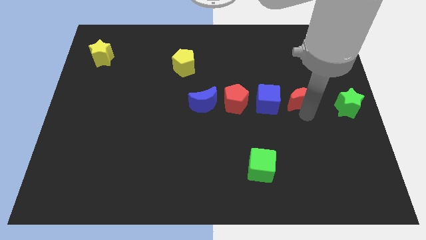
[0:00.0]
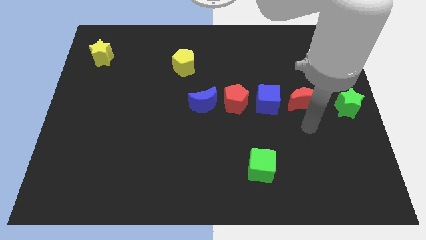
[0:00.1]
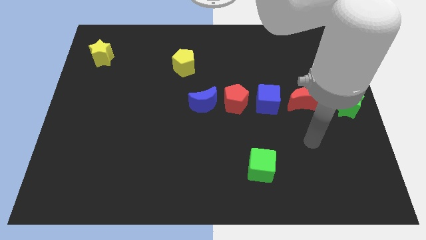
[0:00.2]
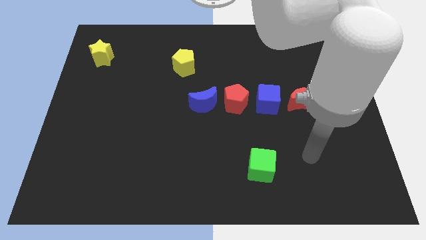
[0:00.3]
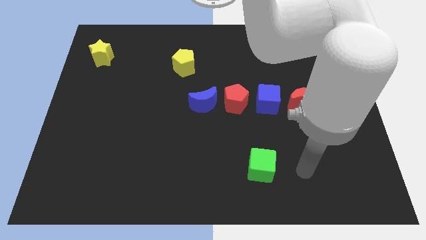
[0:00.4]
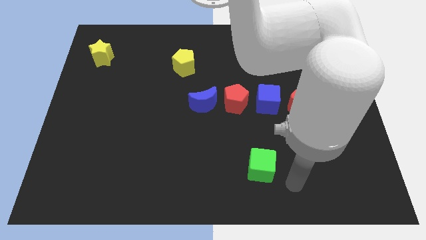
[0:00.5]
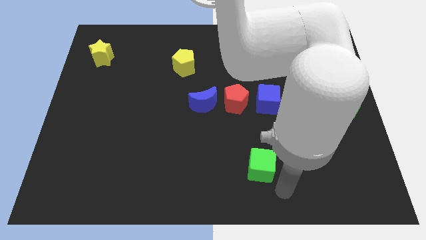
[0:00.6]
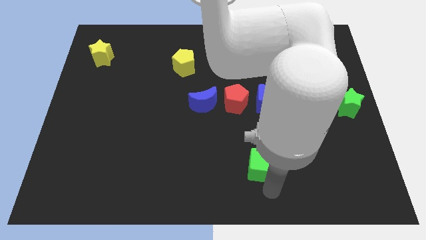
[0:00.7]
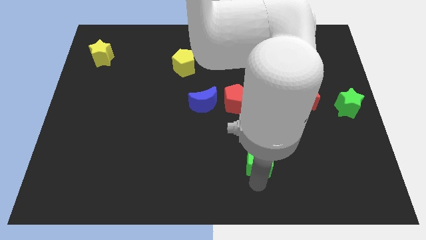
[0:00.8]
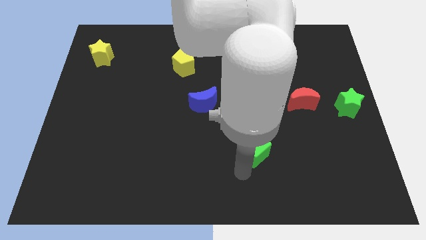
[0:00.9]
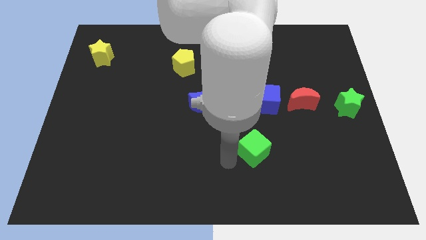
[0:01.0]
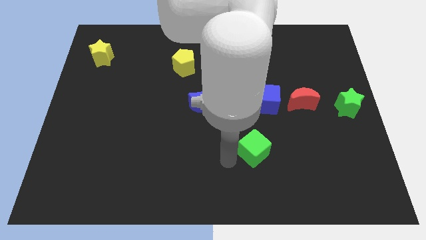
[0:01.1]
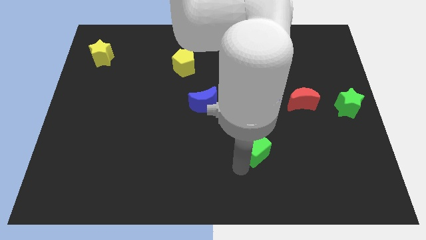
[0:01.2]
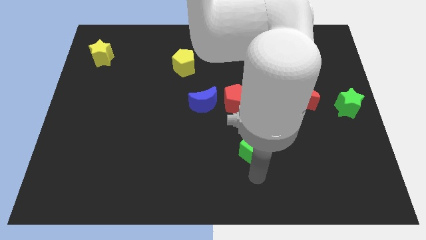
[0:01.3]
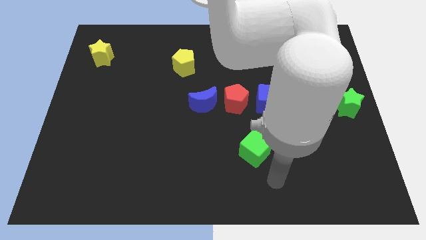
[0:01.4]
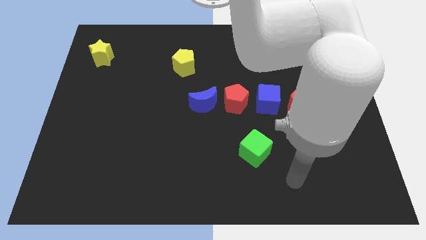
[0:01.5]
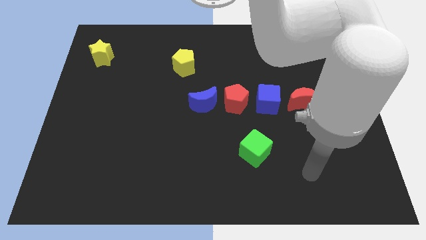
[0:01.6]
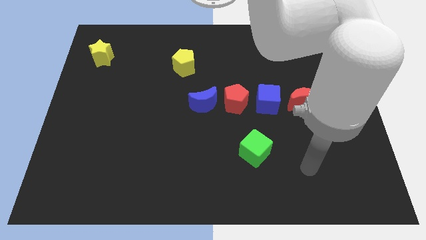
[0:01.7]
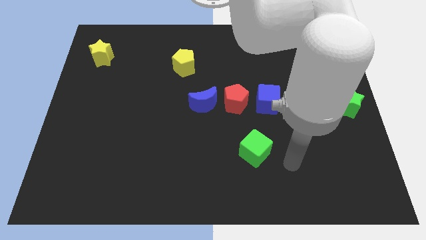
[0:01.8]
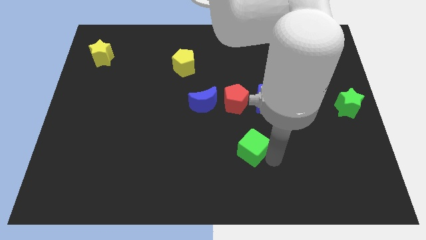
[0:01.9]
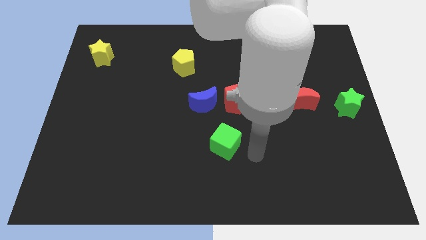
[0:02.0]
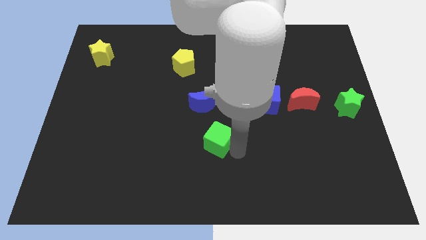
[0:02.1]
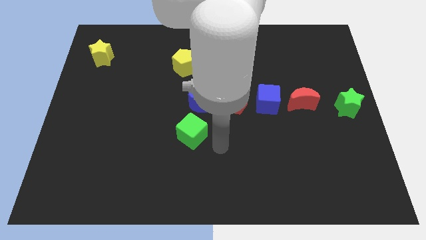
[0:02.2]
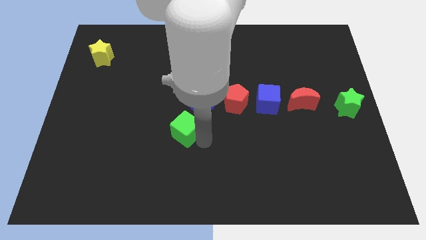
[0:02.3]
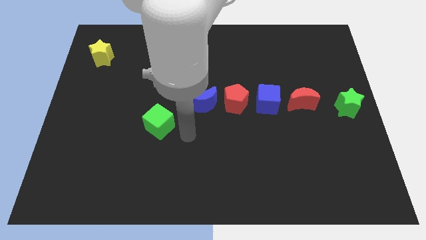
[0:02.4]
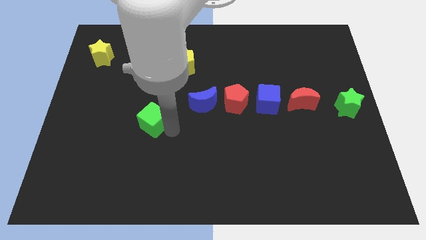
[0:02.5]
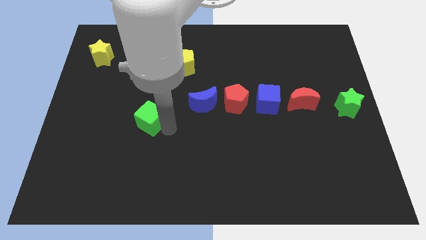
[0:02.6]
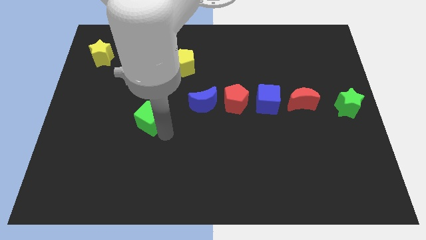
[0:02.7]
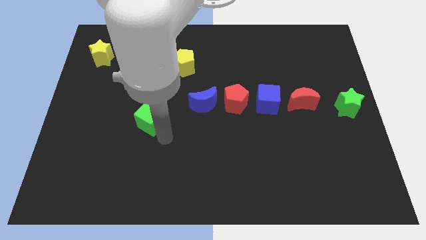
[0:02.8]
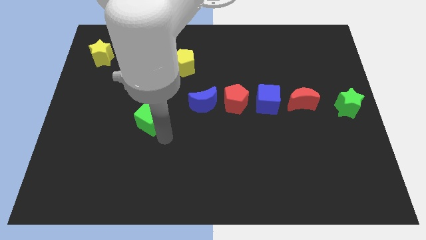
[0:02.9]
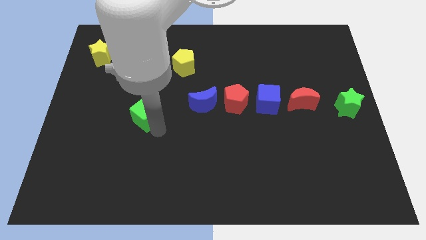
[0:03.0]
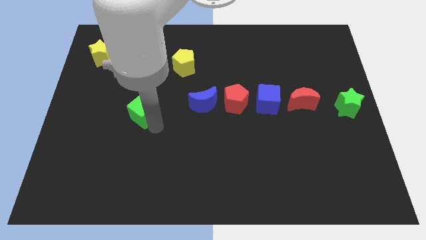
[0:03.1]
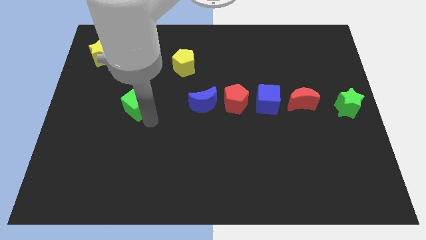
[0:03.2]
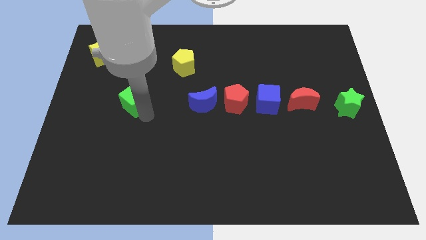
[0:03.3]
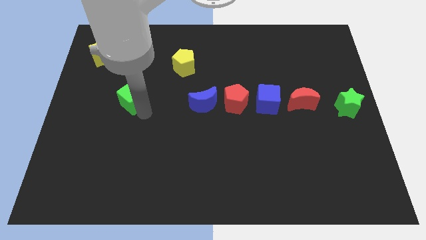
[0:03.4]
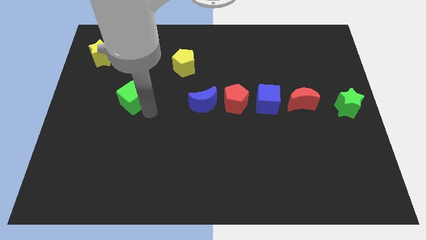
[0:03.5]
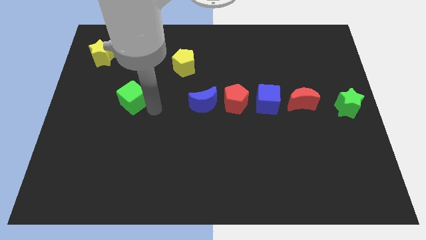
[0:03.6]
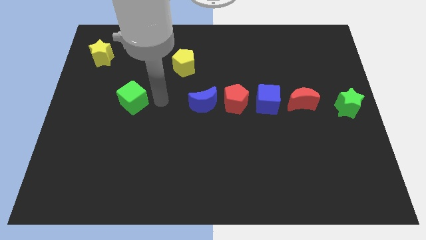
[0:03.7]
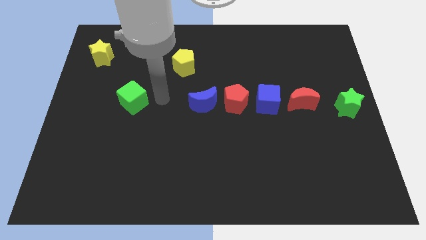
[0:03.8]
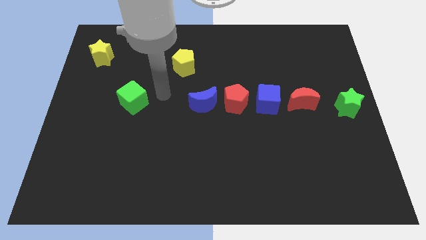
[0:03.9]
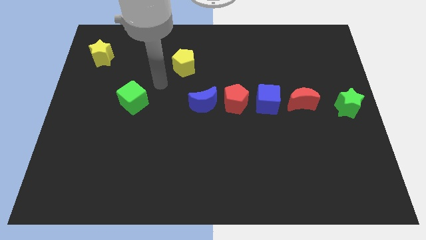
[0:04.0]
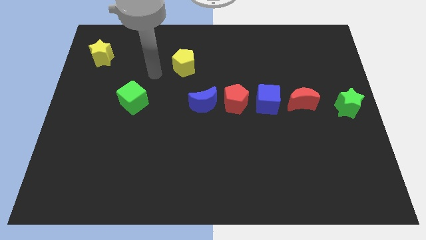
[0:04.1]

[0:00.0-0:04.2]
move the green cube to the left of blue crescent

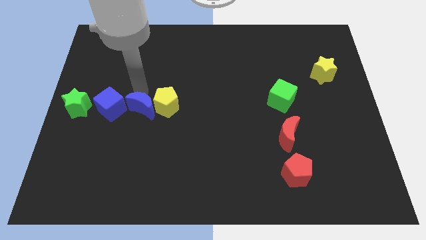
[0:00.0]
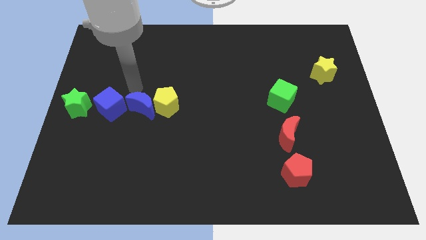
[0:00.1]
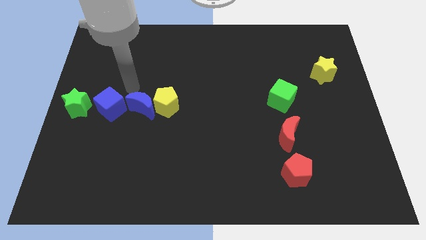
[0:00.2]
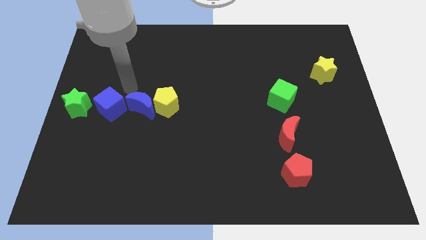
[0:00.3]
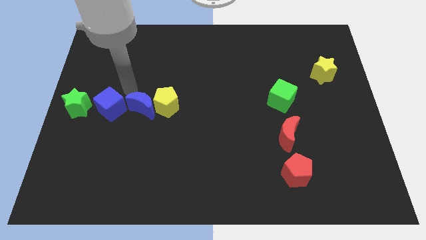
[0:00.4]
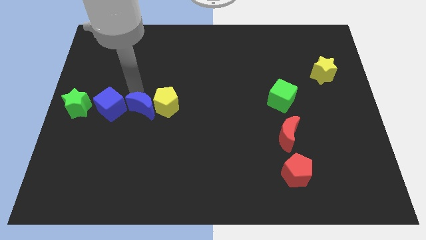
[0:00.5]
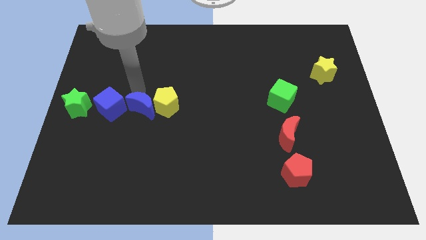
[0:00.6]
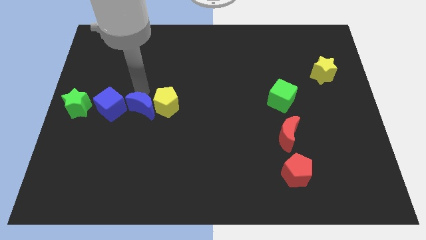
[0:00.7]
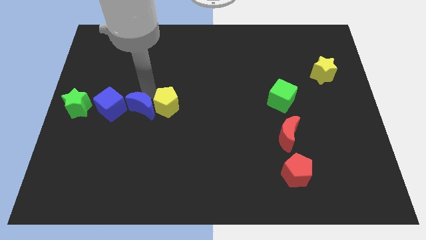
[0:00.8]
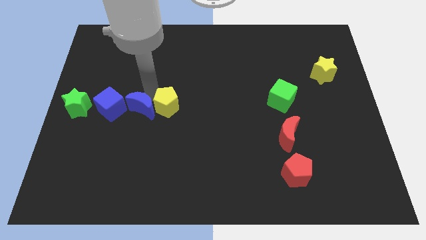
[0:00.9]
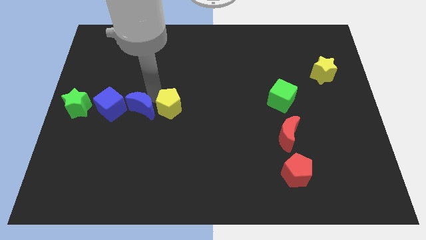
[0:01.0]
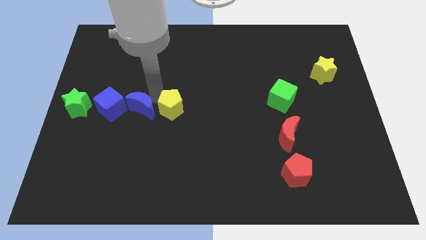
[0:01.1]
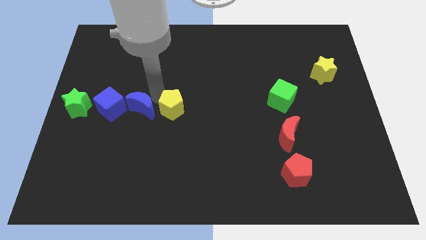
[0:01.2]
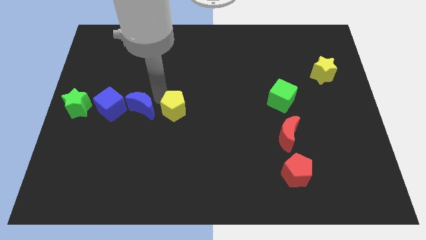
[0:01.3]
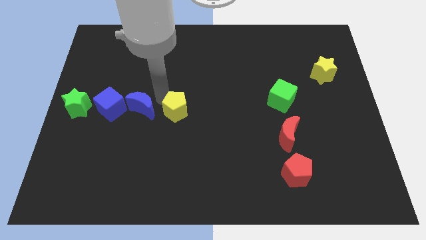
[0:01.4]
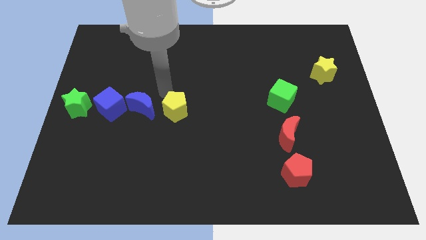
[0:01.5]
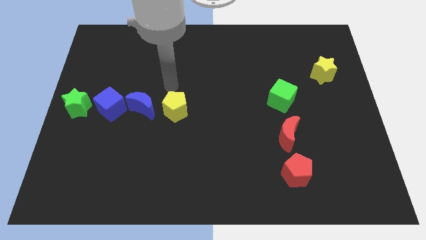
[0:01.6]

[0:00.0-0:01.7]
push the yellow pentagon slightly away from the blue crescent

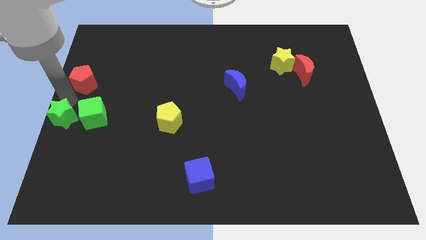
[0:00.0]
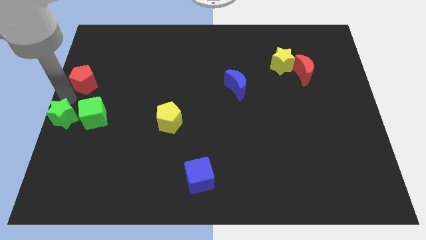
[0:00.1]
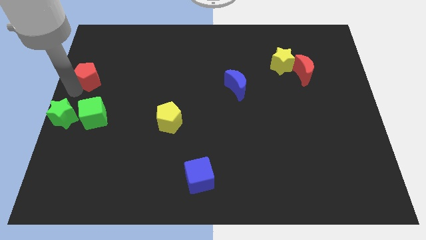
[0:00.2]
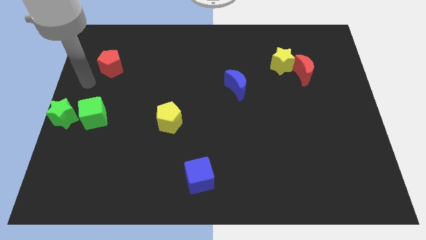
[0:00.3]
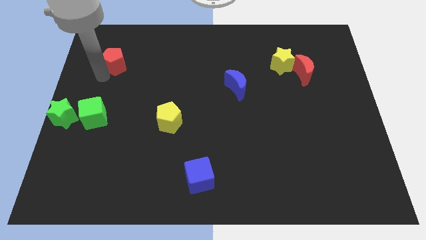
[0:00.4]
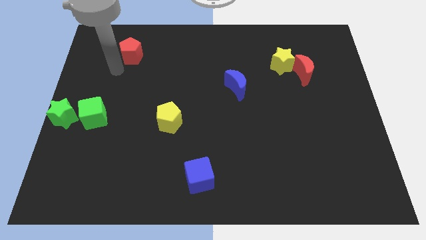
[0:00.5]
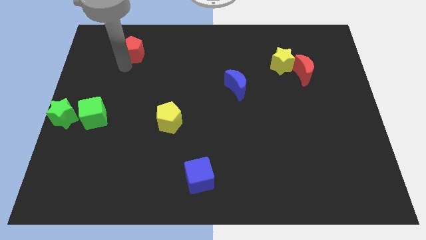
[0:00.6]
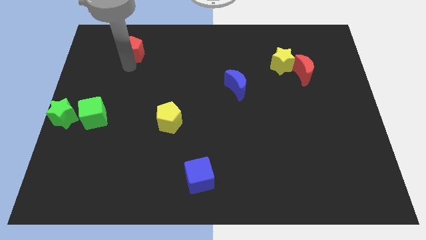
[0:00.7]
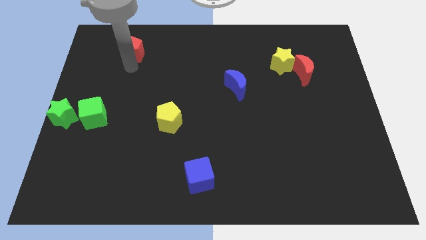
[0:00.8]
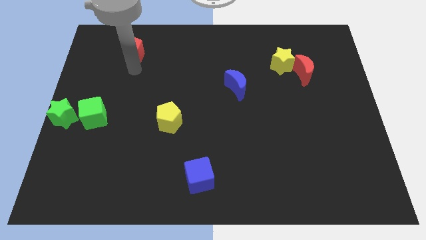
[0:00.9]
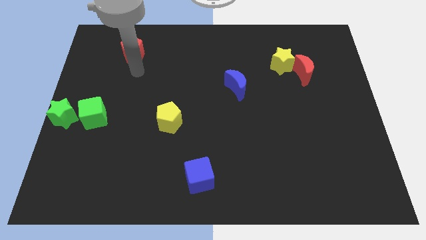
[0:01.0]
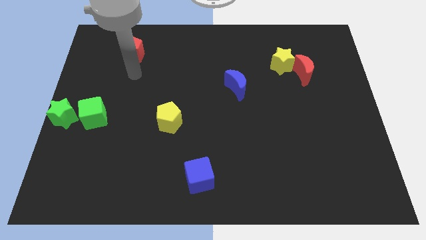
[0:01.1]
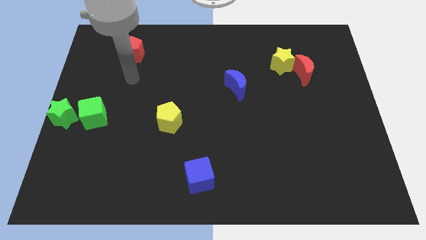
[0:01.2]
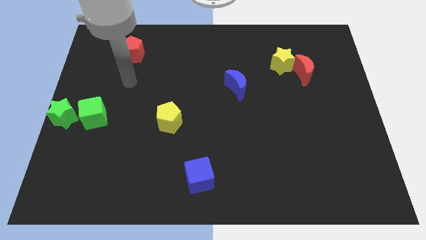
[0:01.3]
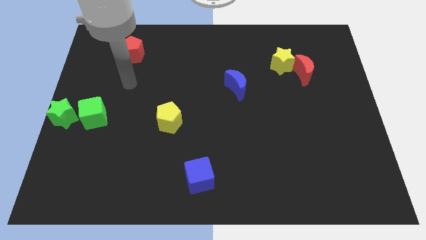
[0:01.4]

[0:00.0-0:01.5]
slide the red pentagon to the top side of the board

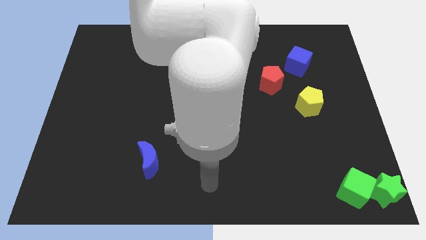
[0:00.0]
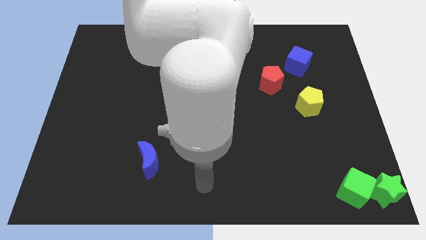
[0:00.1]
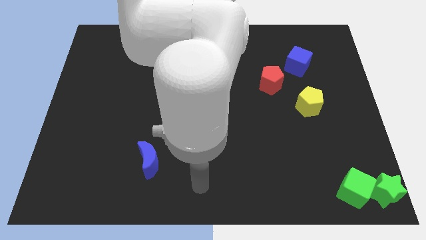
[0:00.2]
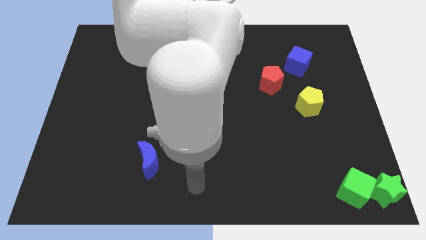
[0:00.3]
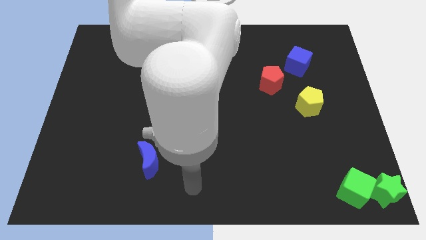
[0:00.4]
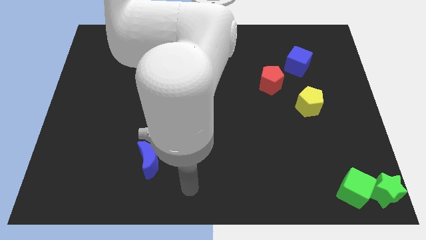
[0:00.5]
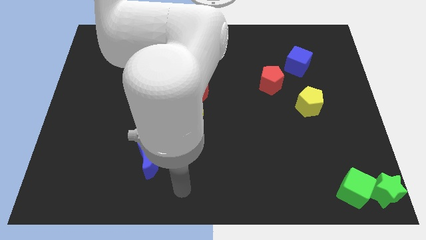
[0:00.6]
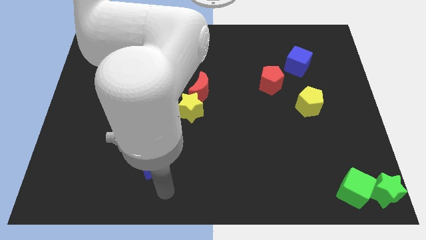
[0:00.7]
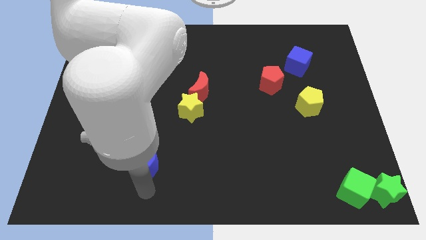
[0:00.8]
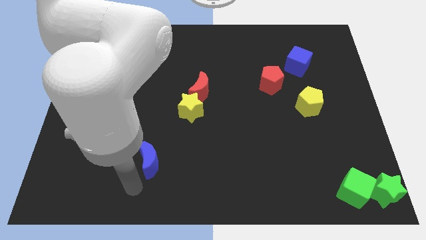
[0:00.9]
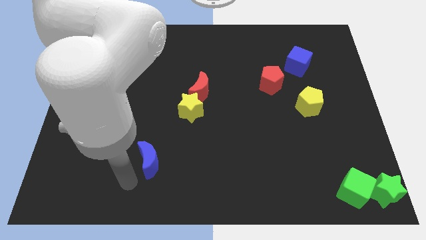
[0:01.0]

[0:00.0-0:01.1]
move your arm to the left of the blue crescent

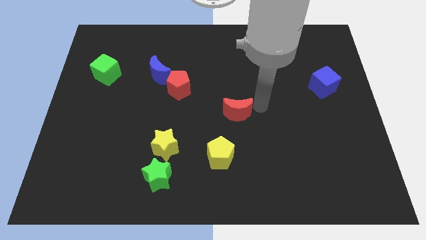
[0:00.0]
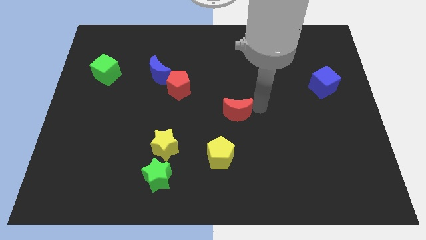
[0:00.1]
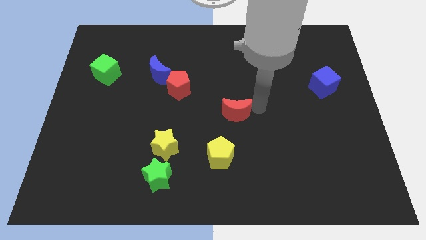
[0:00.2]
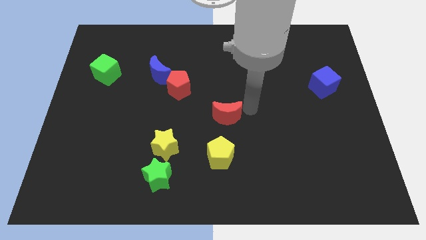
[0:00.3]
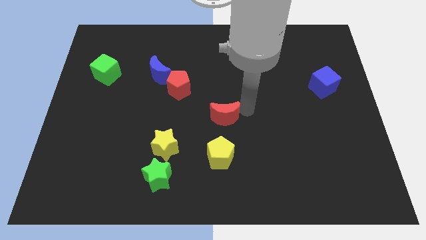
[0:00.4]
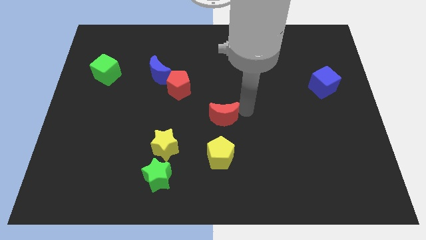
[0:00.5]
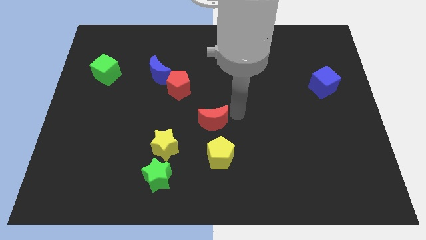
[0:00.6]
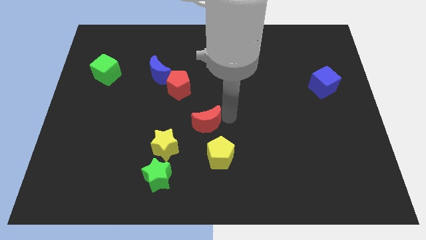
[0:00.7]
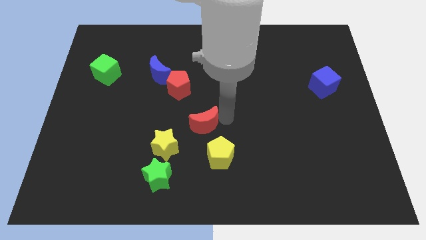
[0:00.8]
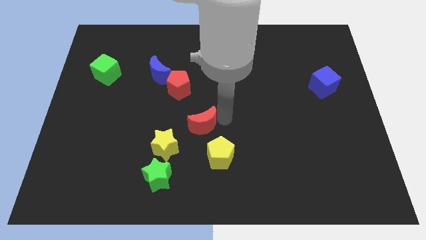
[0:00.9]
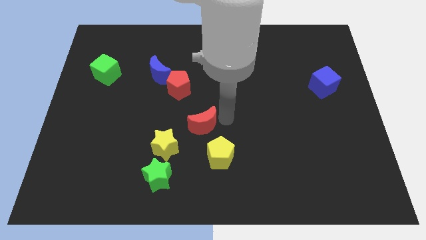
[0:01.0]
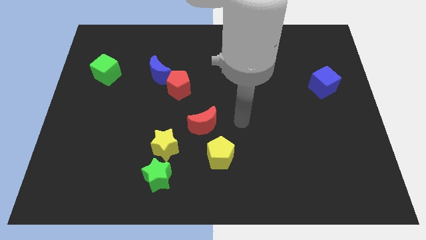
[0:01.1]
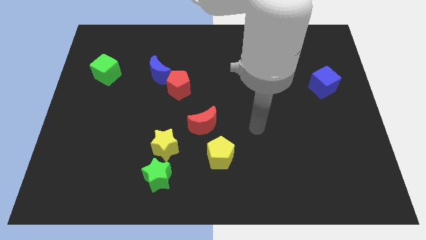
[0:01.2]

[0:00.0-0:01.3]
put the red crescent diagonally in between the red and yellow pentagons
